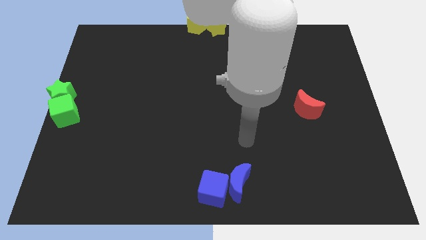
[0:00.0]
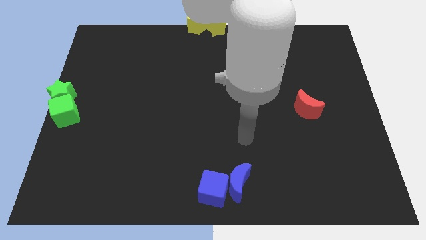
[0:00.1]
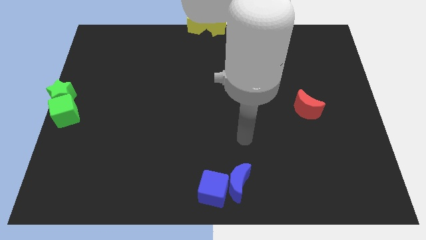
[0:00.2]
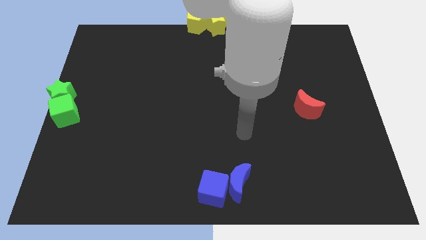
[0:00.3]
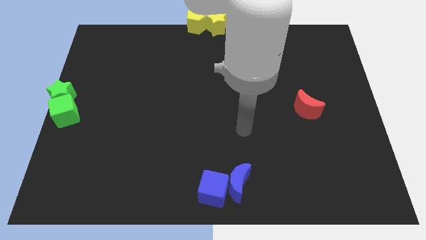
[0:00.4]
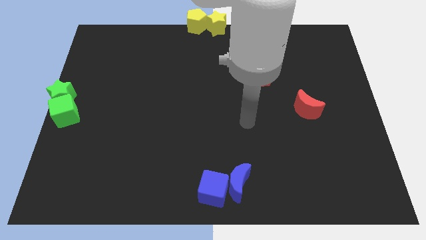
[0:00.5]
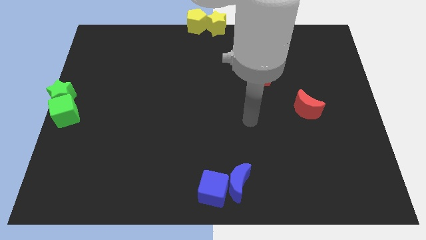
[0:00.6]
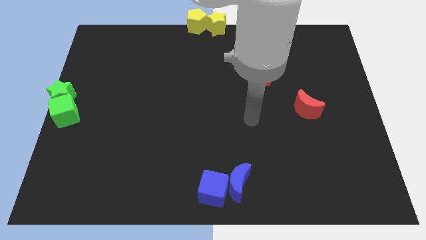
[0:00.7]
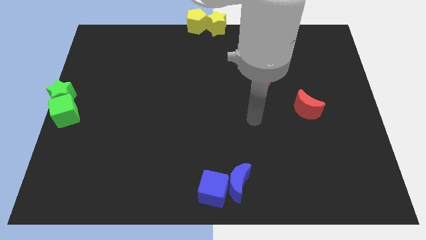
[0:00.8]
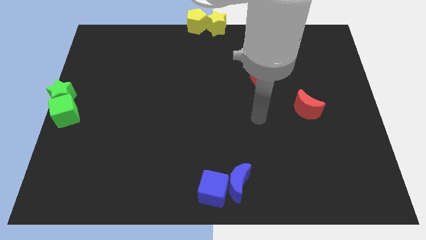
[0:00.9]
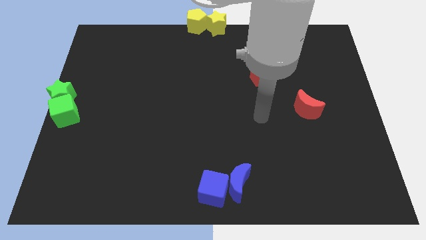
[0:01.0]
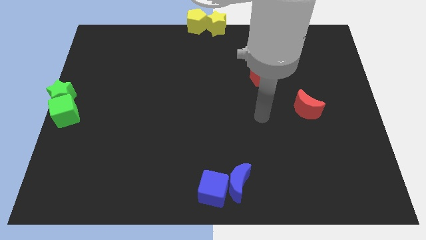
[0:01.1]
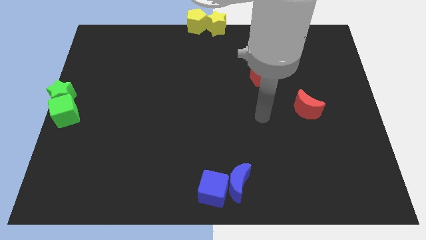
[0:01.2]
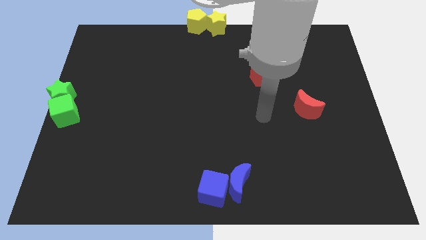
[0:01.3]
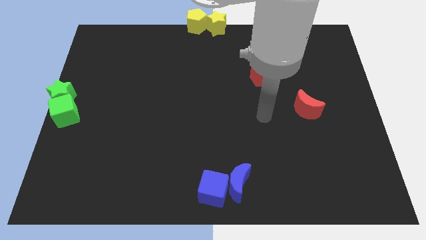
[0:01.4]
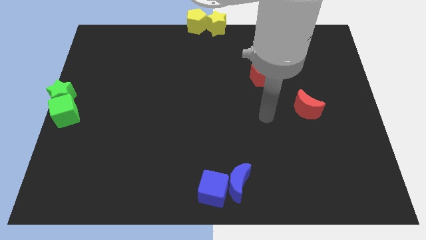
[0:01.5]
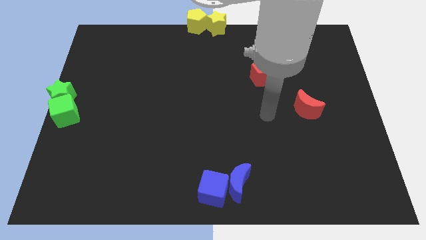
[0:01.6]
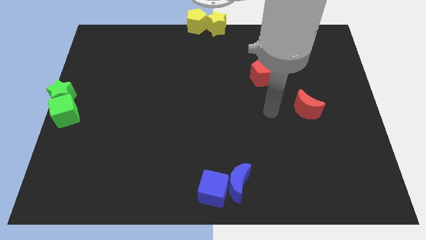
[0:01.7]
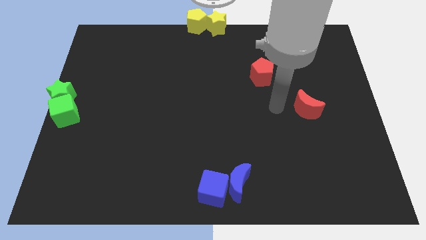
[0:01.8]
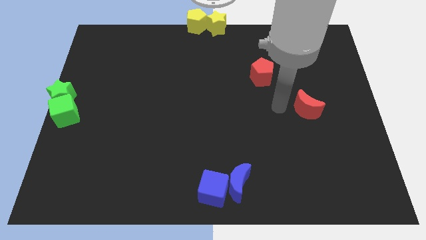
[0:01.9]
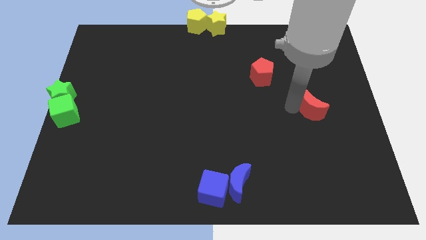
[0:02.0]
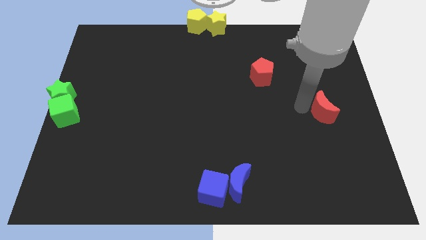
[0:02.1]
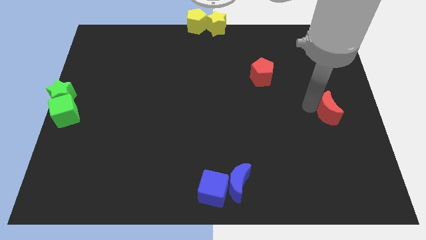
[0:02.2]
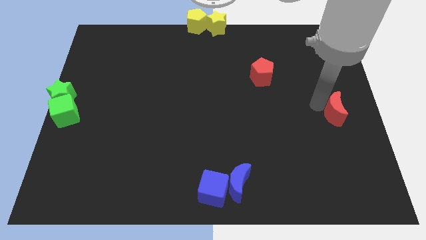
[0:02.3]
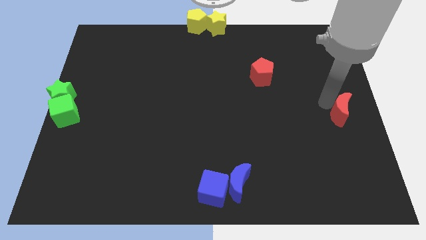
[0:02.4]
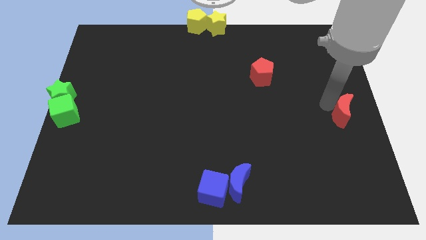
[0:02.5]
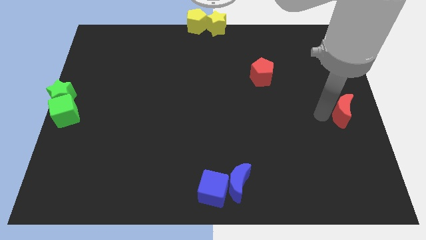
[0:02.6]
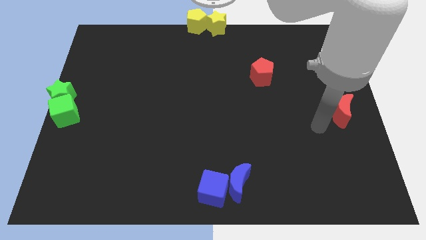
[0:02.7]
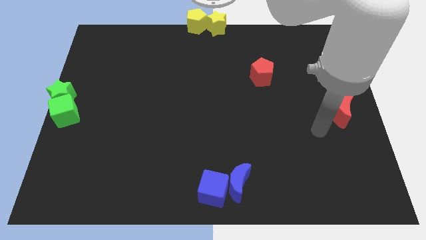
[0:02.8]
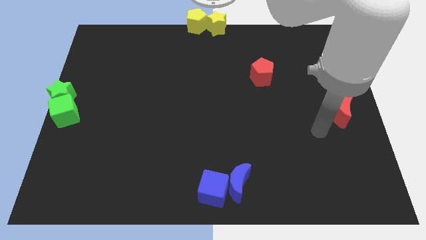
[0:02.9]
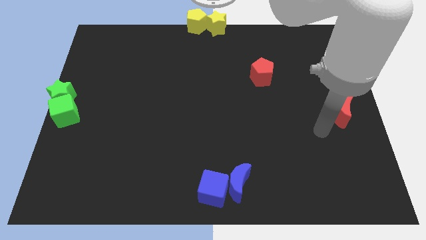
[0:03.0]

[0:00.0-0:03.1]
push the red moon to the right corner

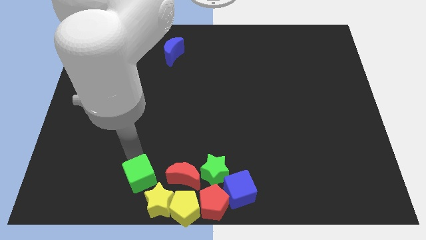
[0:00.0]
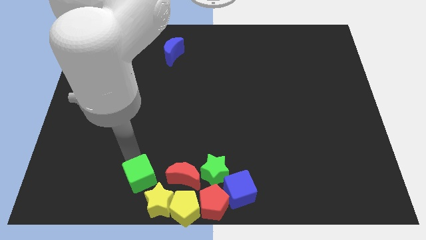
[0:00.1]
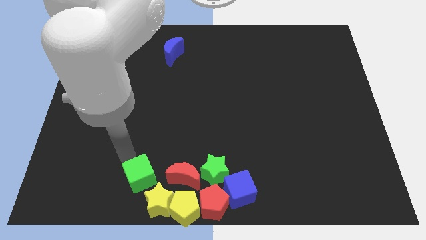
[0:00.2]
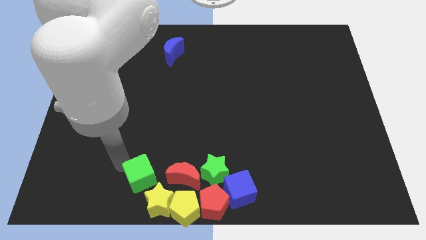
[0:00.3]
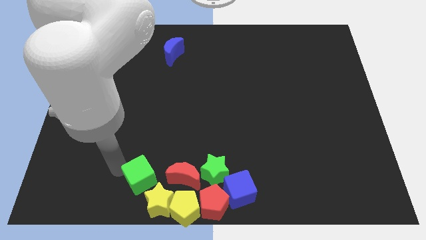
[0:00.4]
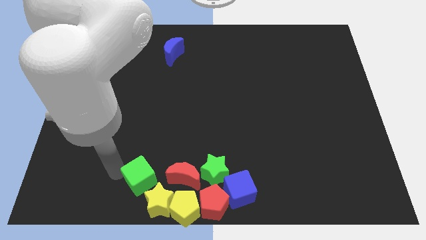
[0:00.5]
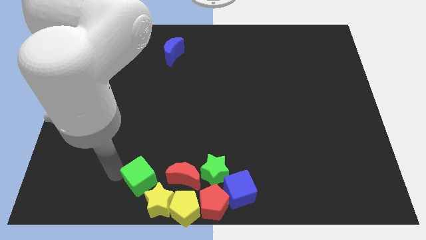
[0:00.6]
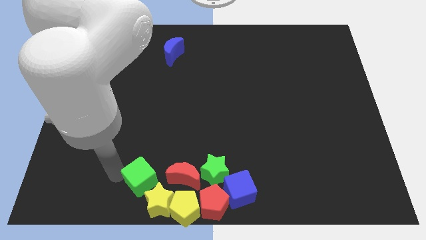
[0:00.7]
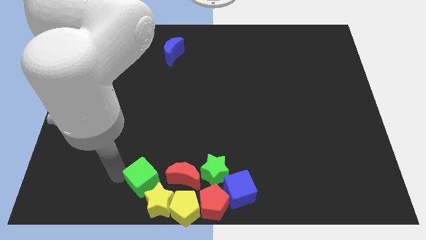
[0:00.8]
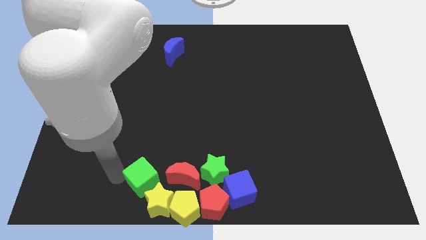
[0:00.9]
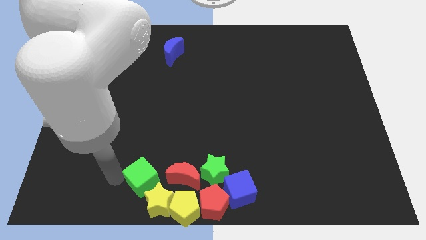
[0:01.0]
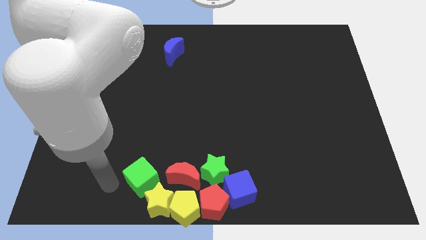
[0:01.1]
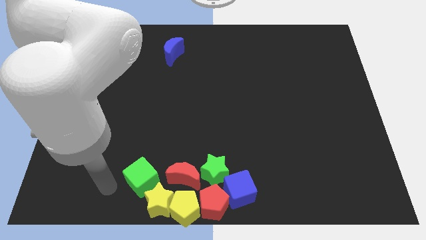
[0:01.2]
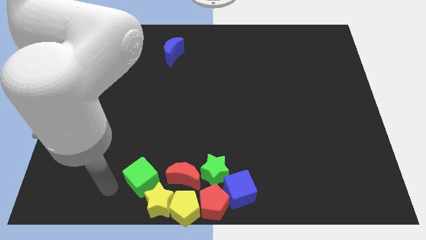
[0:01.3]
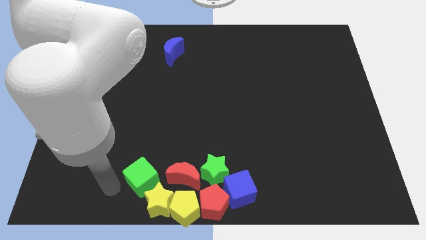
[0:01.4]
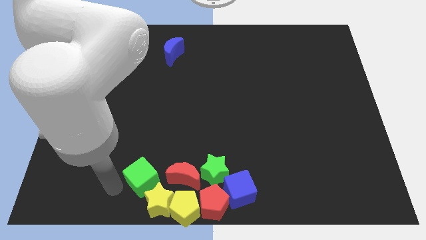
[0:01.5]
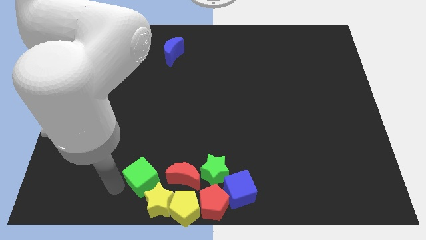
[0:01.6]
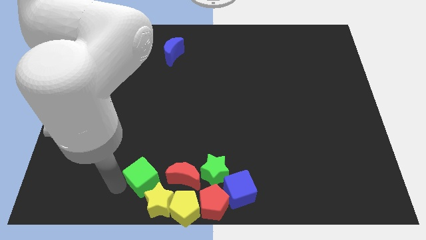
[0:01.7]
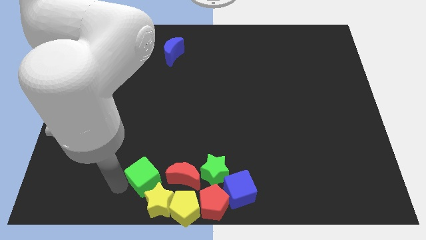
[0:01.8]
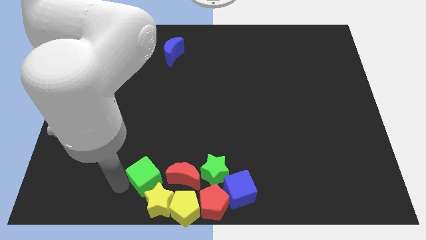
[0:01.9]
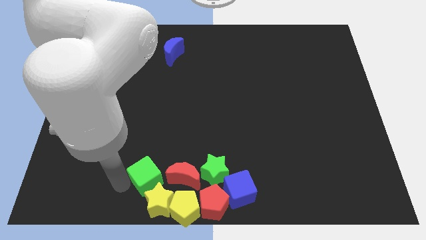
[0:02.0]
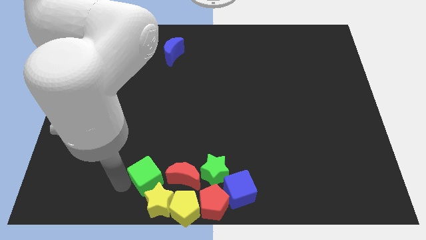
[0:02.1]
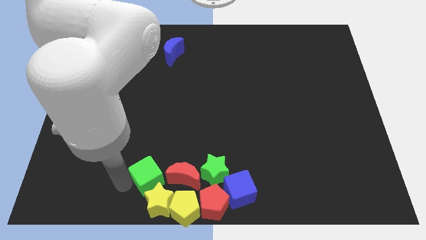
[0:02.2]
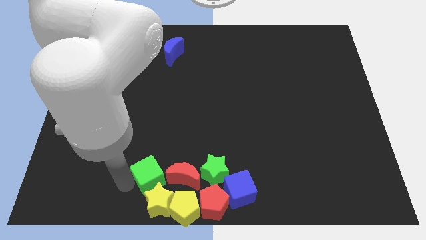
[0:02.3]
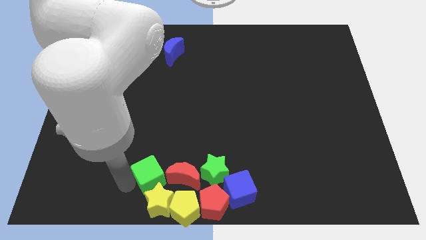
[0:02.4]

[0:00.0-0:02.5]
move the green cube left to the red crescent

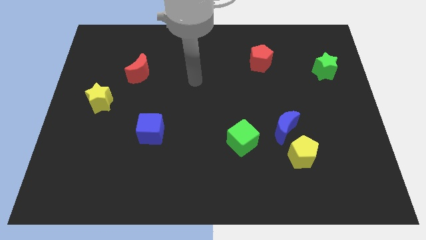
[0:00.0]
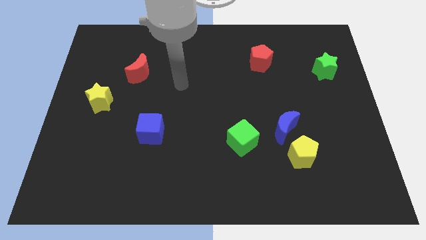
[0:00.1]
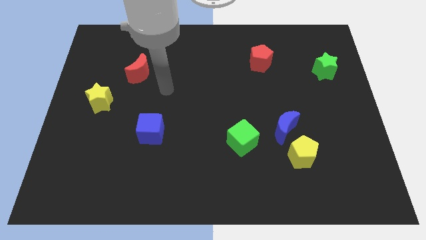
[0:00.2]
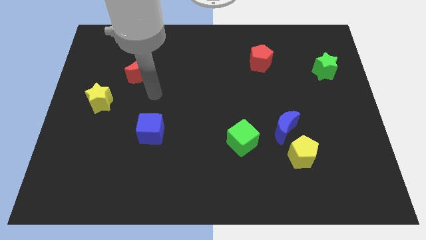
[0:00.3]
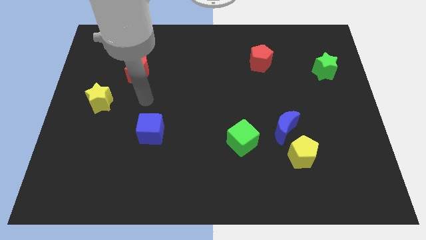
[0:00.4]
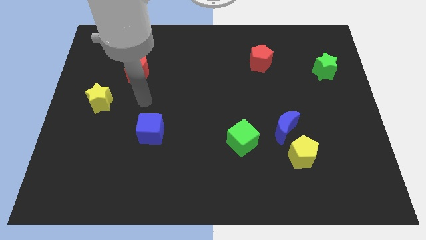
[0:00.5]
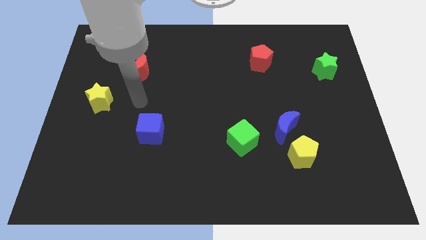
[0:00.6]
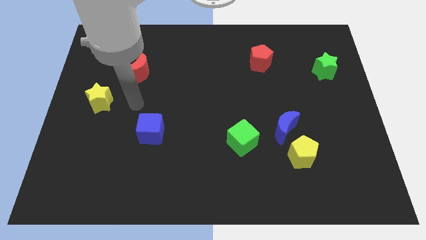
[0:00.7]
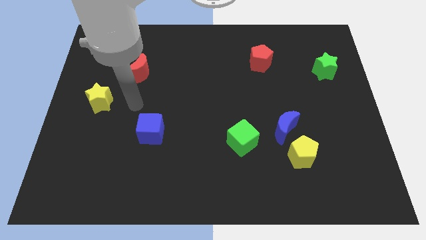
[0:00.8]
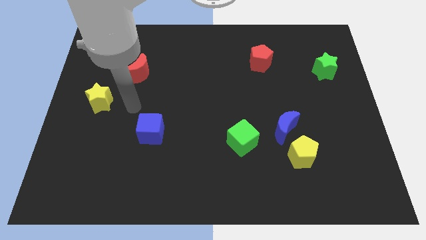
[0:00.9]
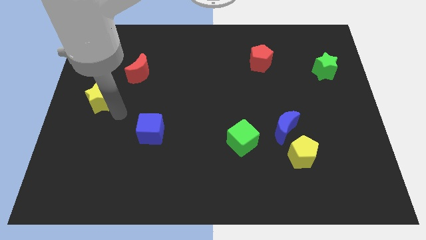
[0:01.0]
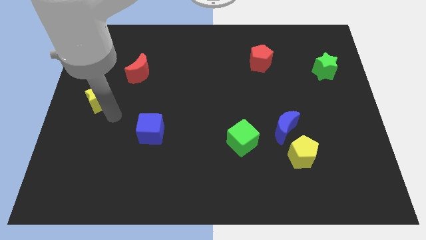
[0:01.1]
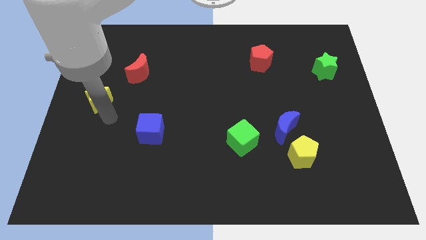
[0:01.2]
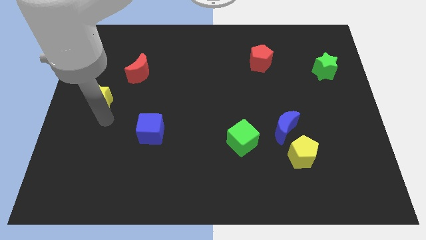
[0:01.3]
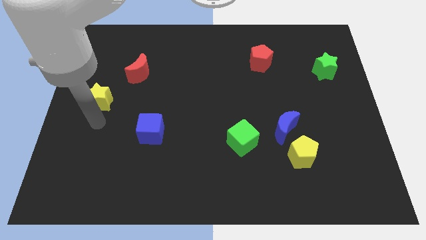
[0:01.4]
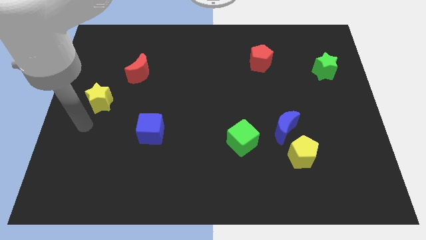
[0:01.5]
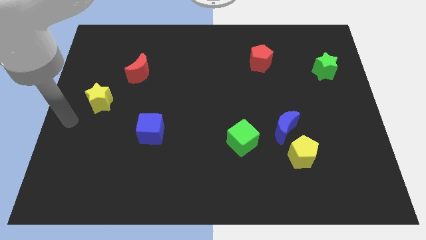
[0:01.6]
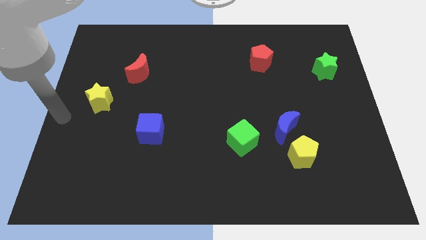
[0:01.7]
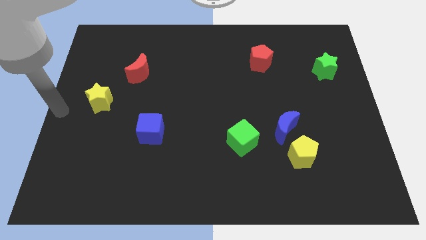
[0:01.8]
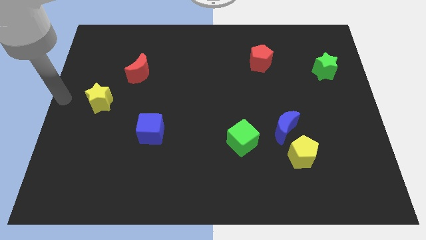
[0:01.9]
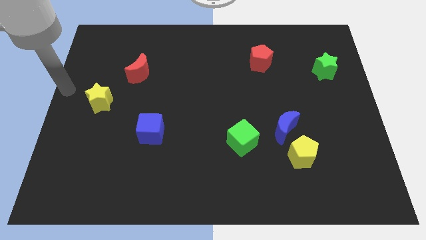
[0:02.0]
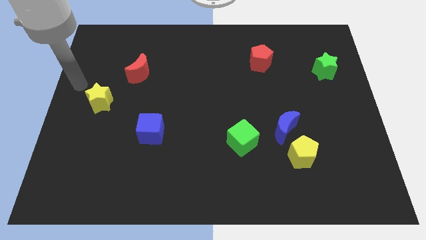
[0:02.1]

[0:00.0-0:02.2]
move the arm towards the yellow star

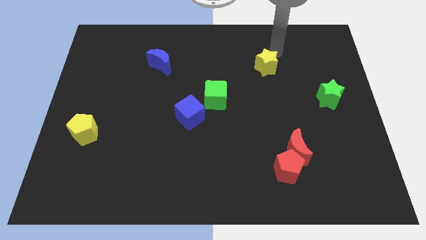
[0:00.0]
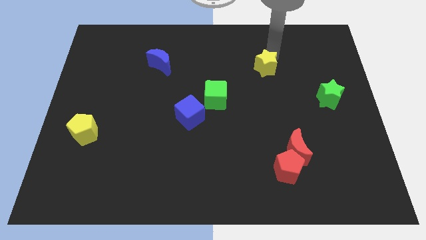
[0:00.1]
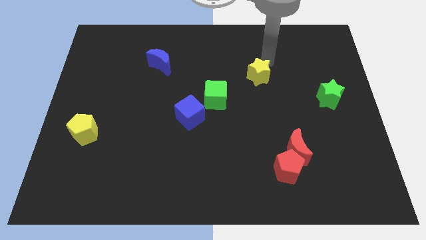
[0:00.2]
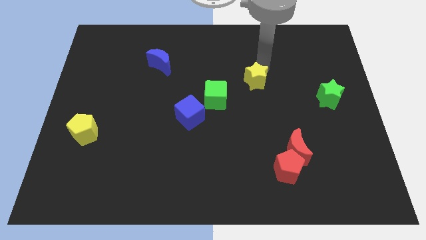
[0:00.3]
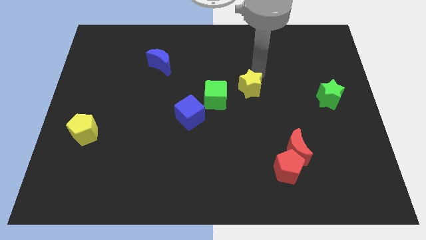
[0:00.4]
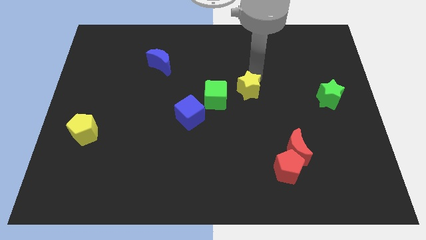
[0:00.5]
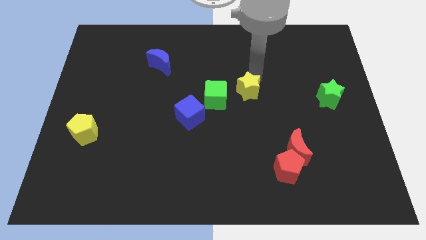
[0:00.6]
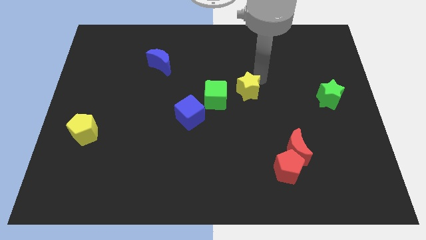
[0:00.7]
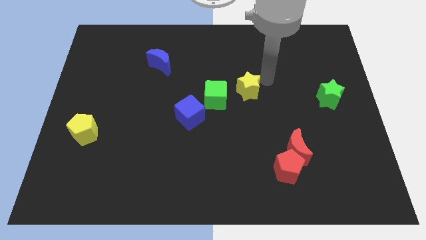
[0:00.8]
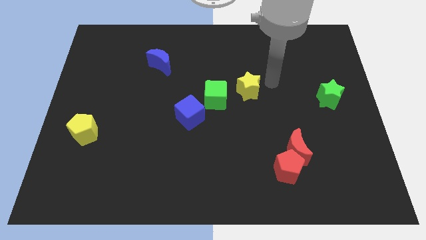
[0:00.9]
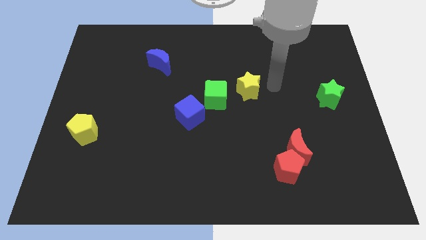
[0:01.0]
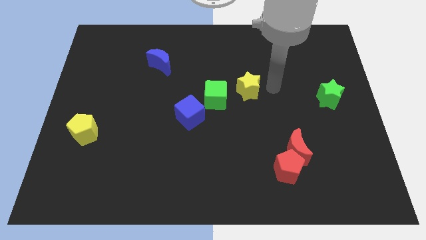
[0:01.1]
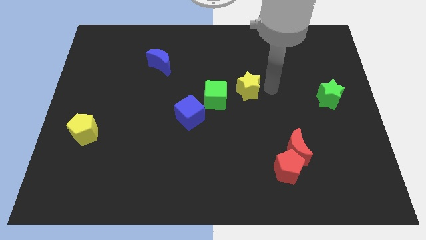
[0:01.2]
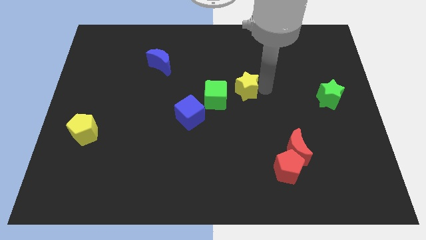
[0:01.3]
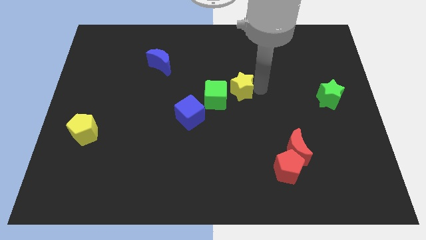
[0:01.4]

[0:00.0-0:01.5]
push the yellow star to the right of the green cube
